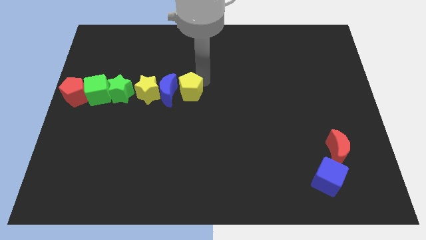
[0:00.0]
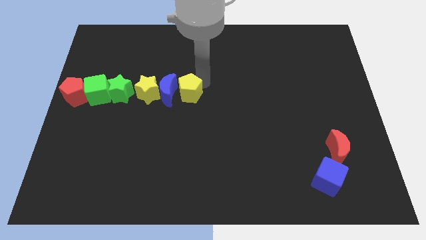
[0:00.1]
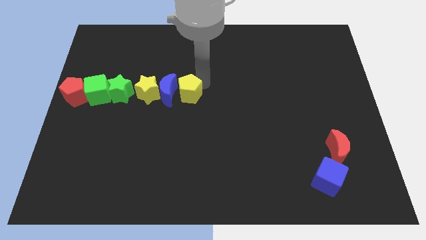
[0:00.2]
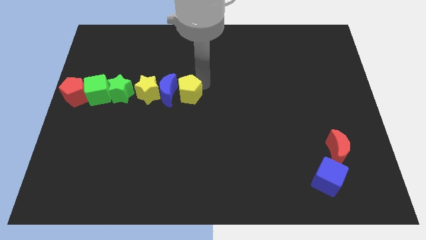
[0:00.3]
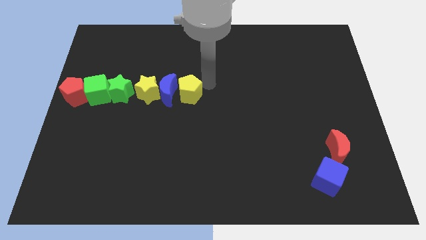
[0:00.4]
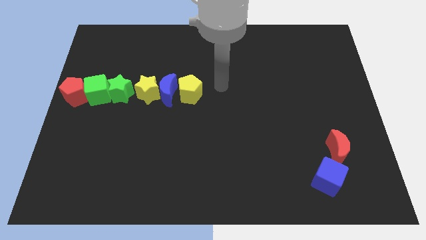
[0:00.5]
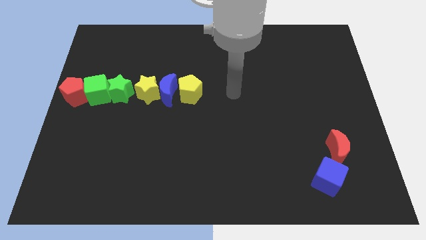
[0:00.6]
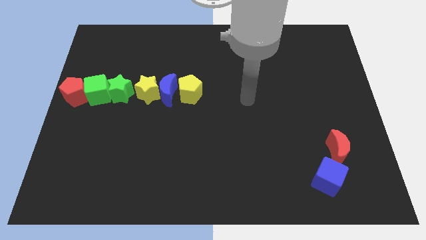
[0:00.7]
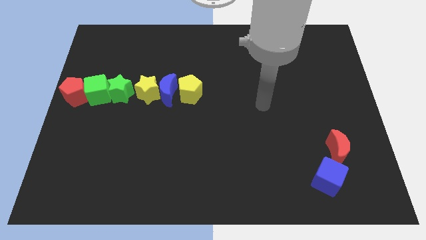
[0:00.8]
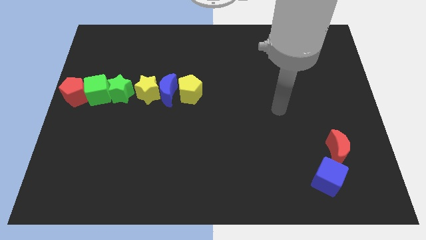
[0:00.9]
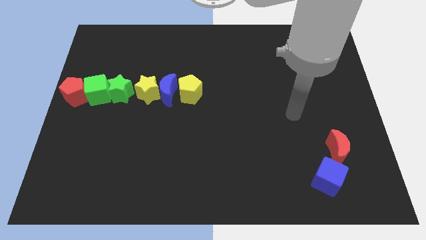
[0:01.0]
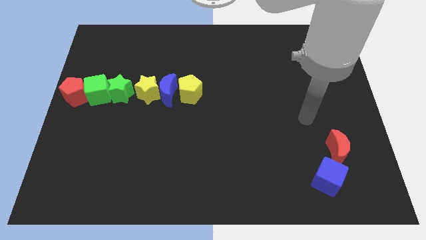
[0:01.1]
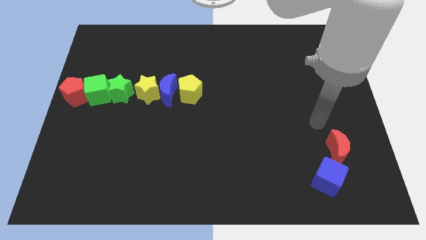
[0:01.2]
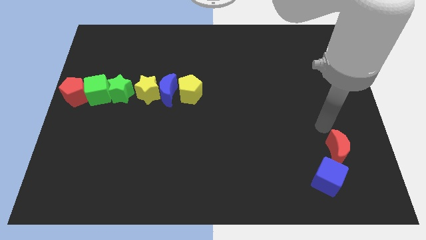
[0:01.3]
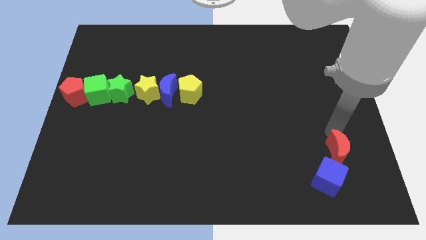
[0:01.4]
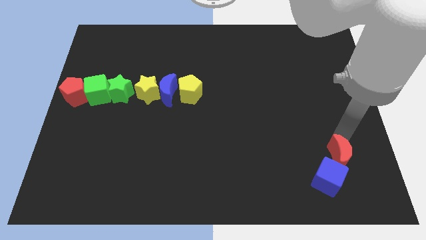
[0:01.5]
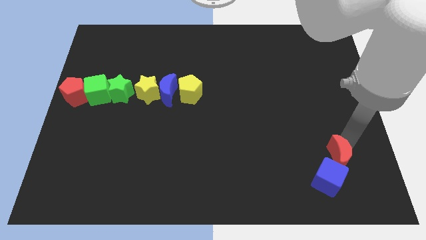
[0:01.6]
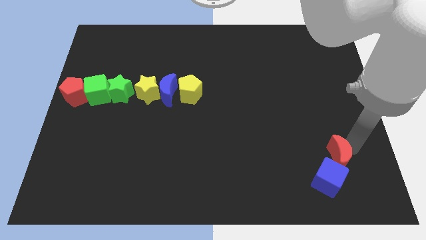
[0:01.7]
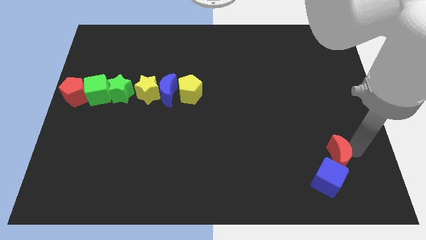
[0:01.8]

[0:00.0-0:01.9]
move your arm towards the red moon

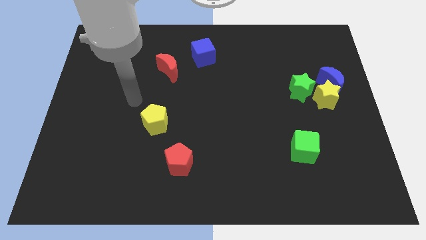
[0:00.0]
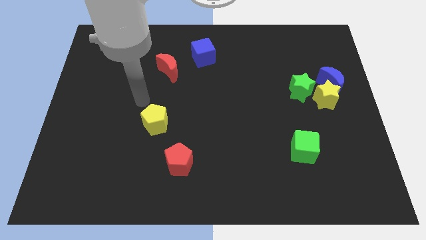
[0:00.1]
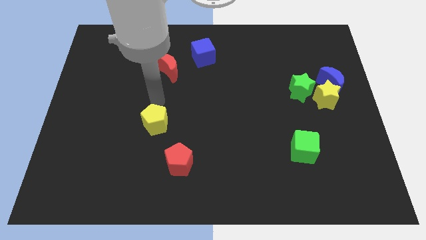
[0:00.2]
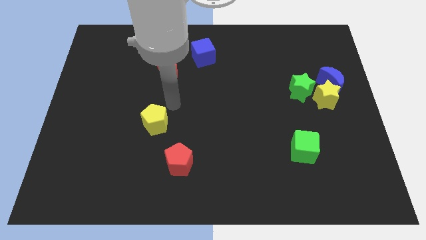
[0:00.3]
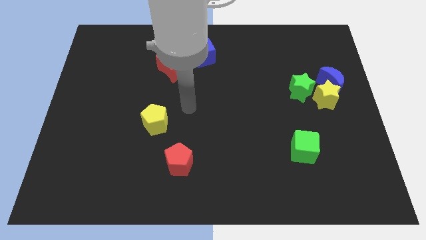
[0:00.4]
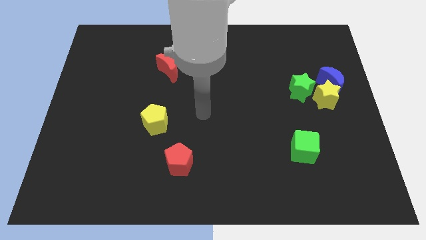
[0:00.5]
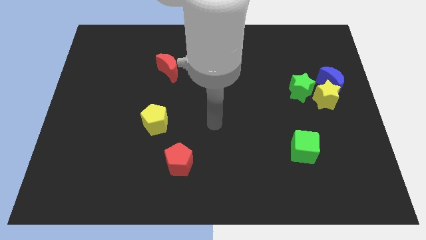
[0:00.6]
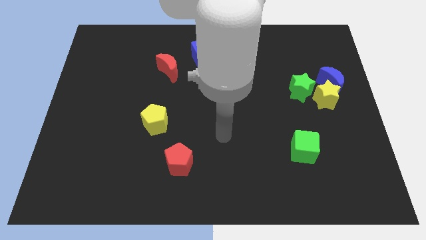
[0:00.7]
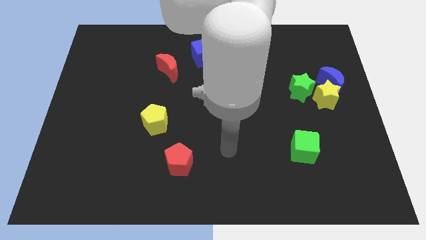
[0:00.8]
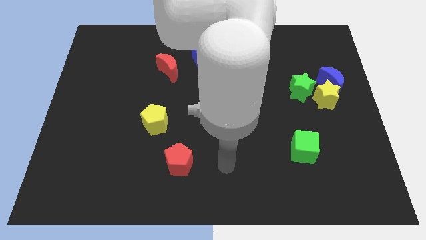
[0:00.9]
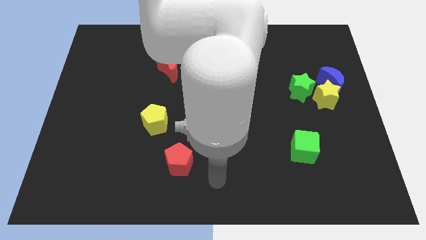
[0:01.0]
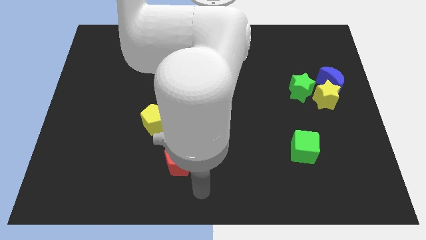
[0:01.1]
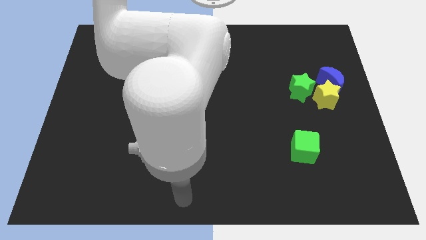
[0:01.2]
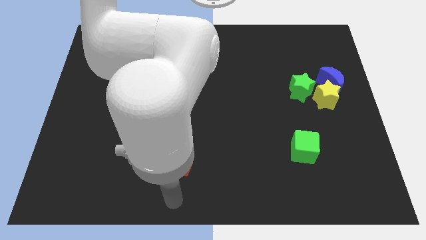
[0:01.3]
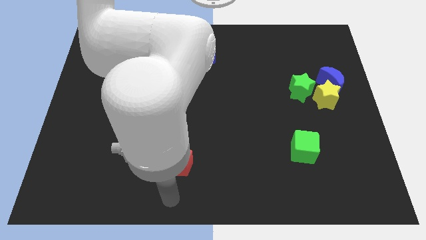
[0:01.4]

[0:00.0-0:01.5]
move your arm below the red pentagon

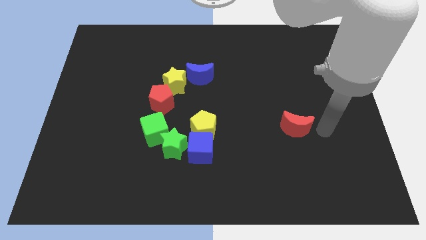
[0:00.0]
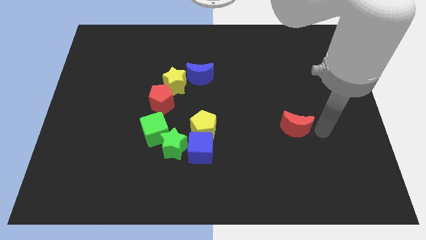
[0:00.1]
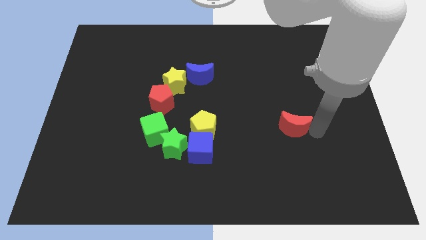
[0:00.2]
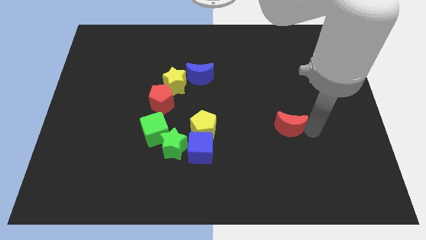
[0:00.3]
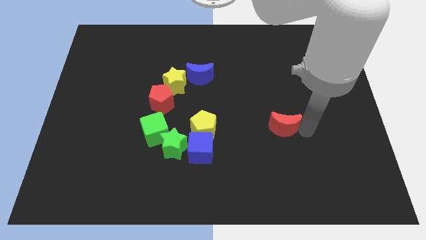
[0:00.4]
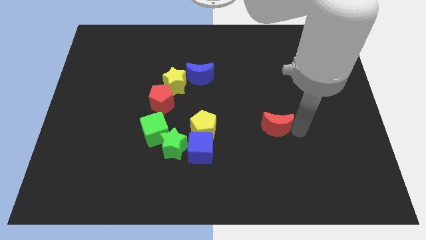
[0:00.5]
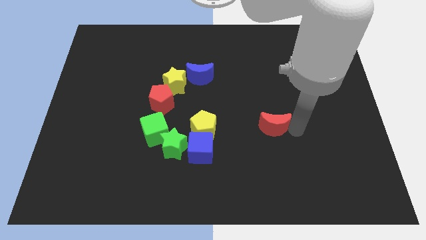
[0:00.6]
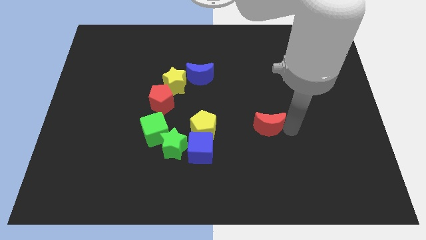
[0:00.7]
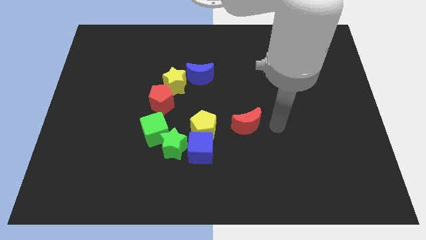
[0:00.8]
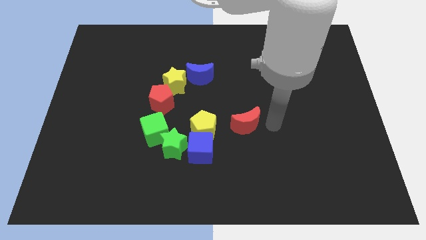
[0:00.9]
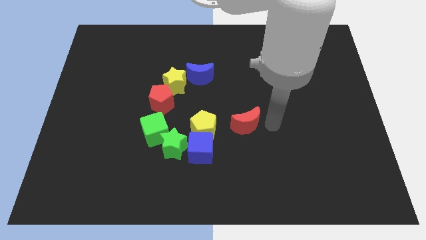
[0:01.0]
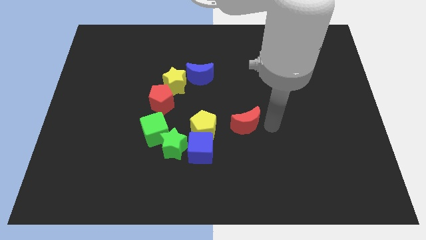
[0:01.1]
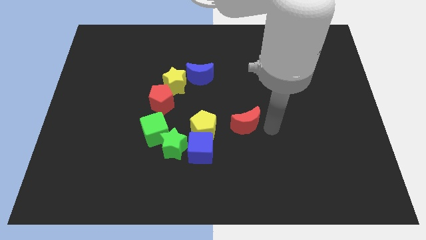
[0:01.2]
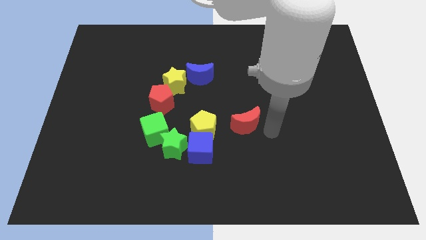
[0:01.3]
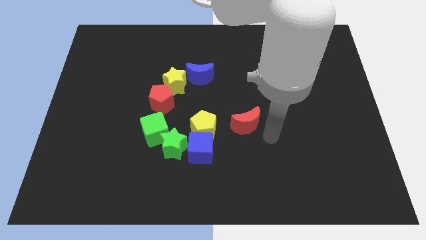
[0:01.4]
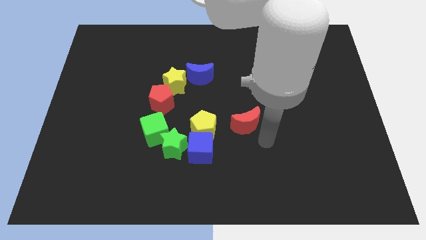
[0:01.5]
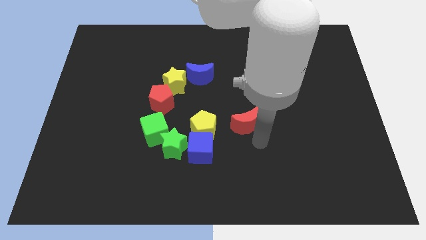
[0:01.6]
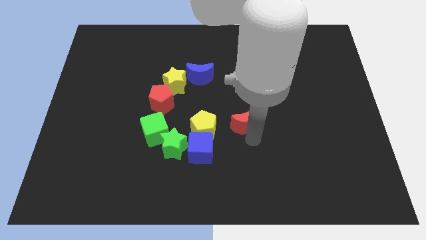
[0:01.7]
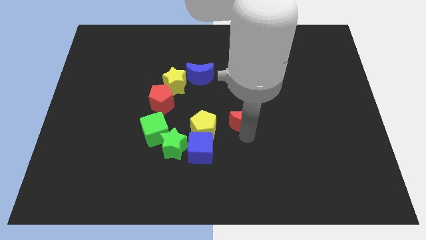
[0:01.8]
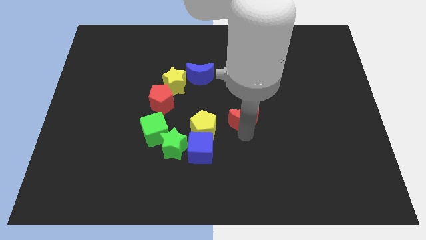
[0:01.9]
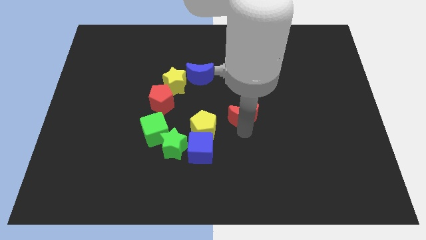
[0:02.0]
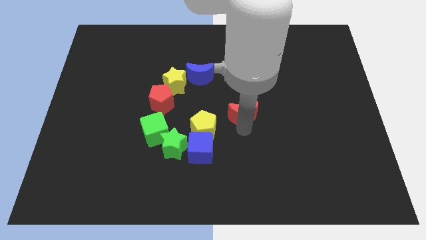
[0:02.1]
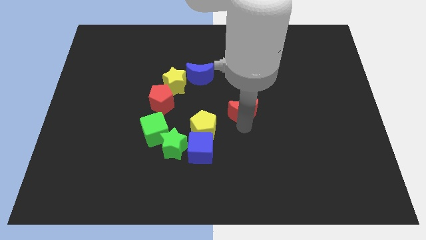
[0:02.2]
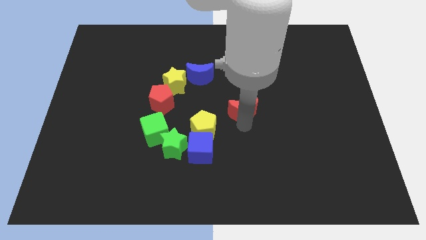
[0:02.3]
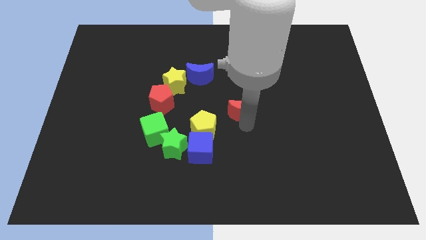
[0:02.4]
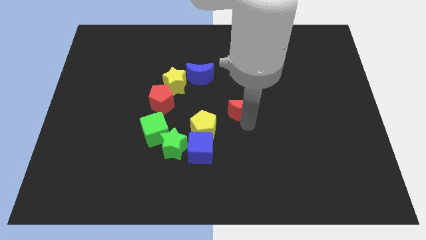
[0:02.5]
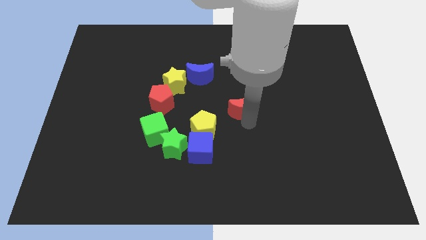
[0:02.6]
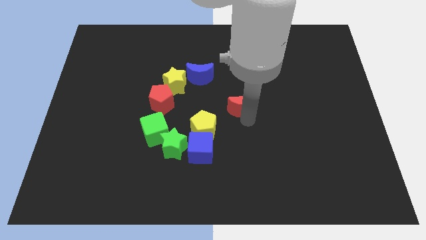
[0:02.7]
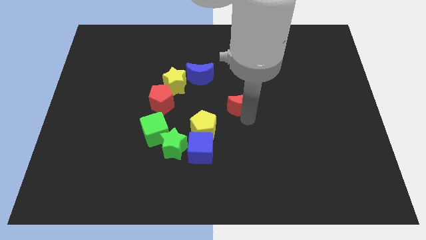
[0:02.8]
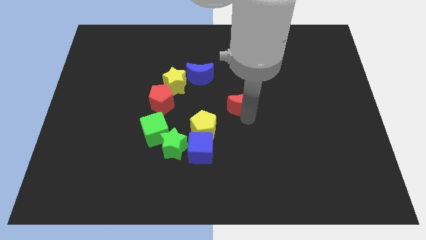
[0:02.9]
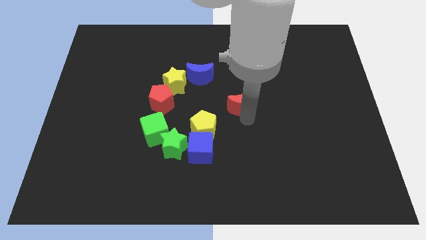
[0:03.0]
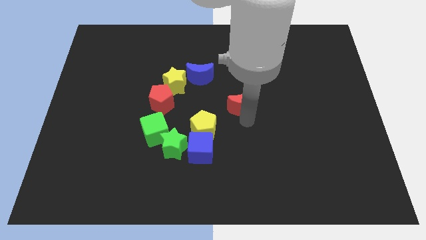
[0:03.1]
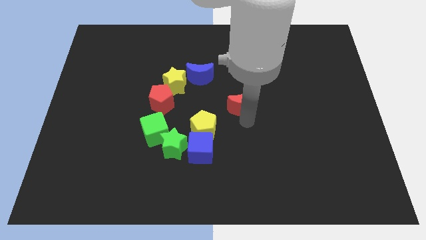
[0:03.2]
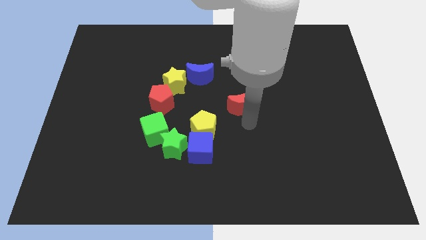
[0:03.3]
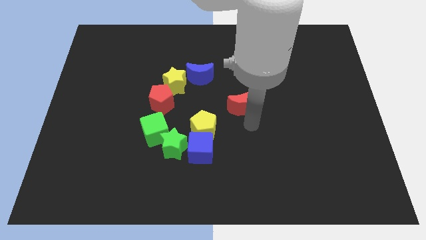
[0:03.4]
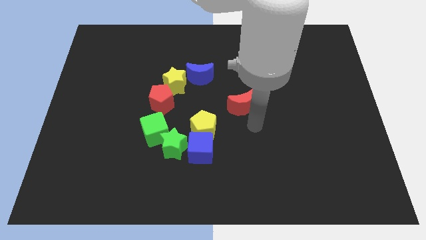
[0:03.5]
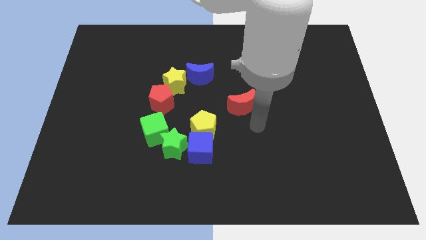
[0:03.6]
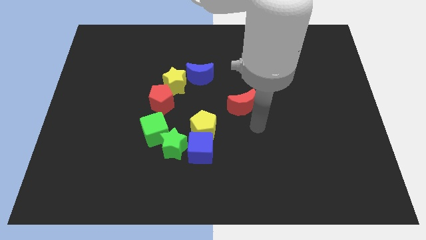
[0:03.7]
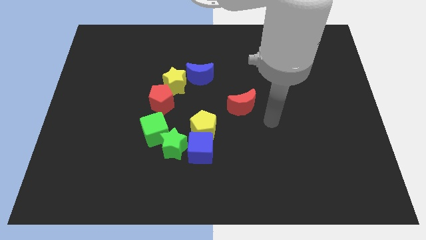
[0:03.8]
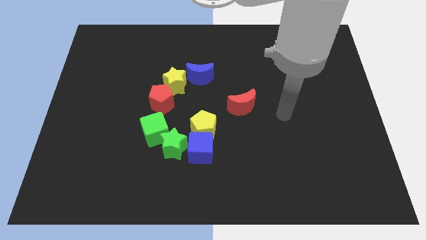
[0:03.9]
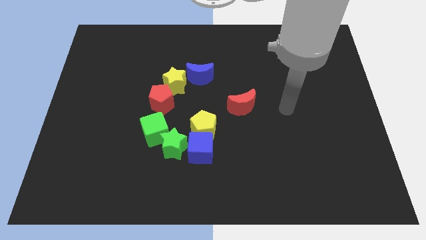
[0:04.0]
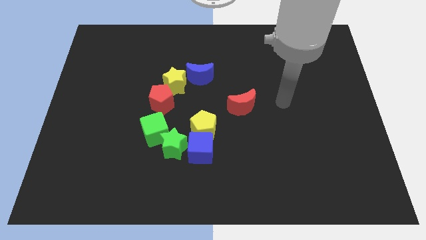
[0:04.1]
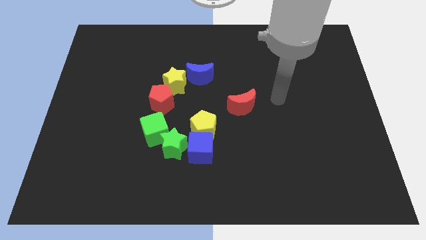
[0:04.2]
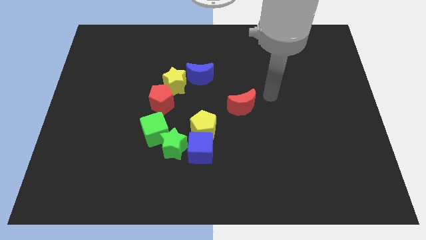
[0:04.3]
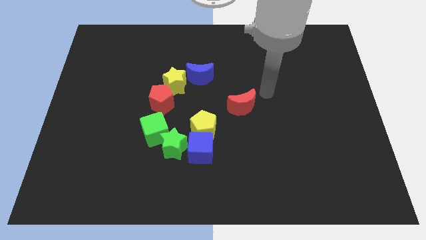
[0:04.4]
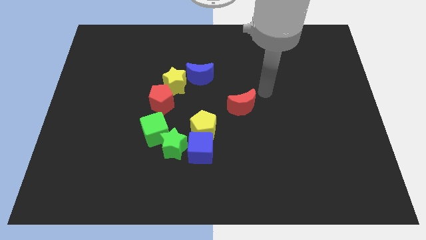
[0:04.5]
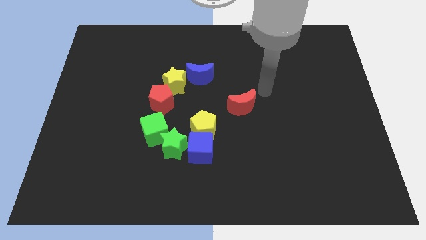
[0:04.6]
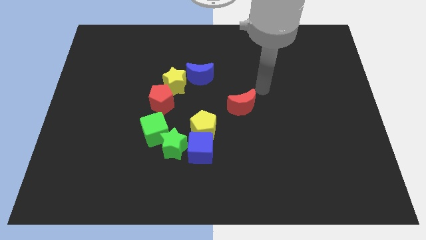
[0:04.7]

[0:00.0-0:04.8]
move the red crescent to the left of the board

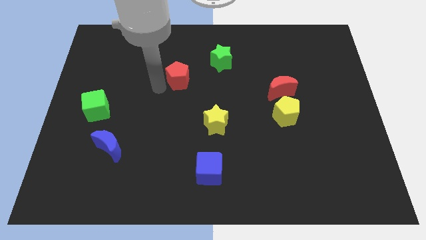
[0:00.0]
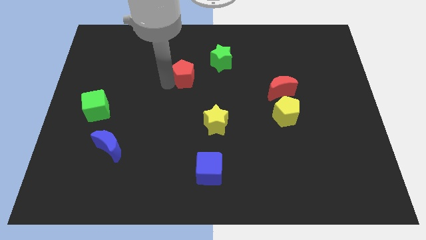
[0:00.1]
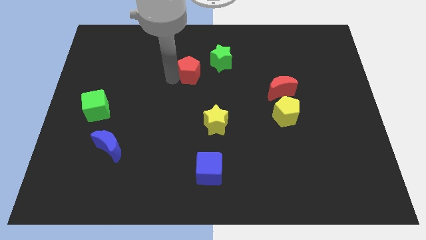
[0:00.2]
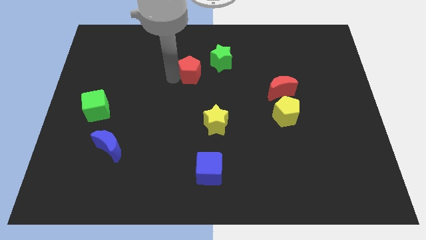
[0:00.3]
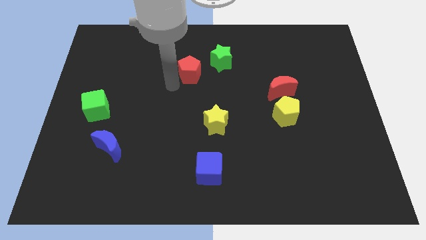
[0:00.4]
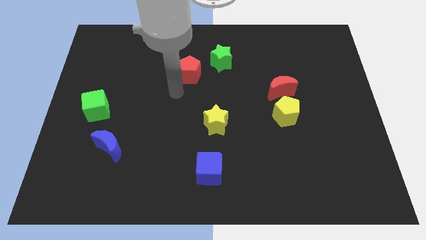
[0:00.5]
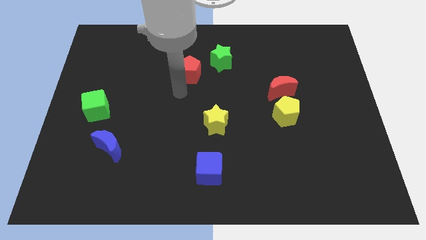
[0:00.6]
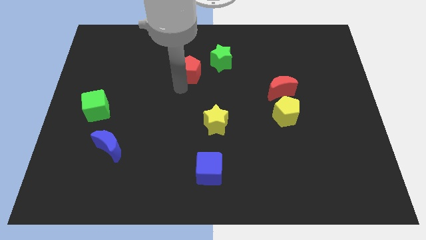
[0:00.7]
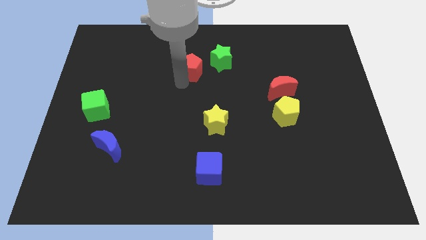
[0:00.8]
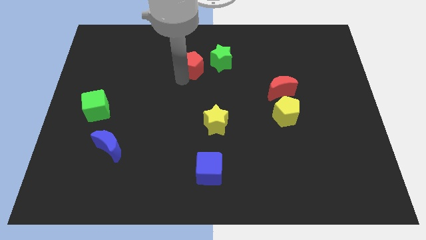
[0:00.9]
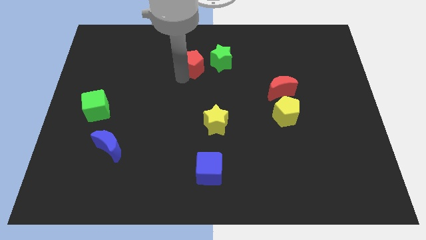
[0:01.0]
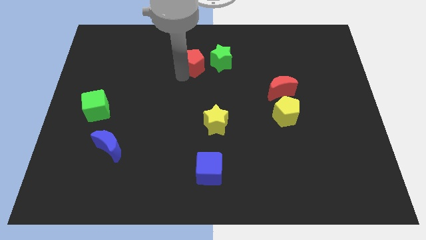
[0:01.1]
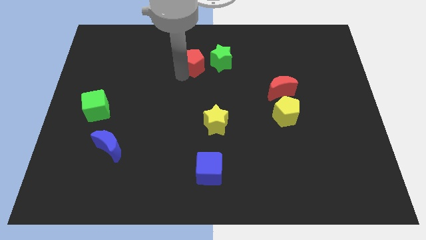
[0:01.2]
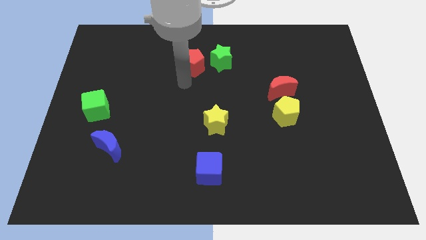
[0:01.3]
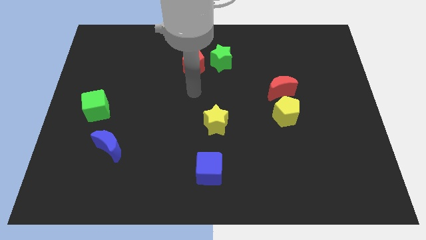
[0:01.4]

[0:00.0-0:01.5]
push the red pentagon close to the green star
